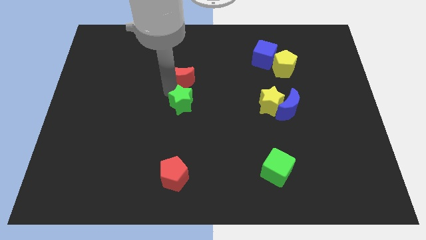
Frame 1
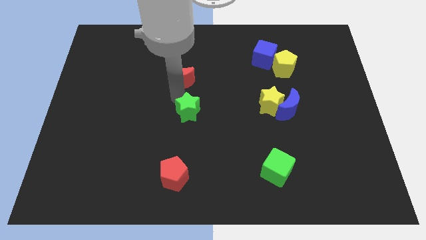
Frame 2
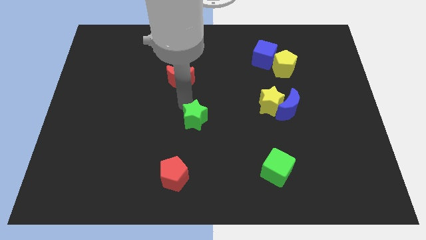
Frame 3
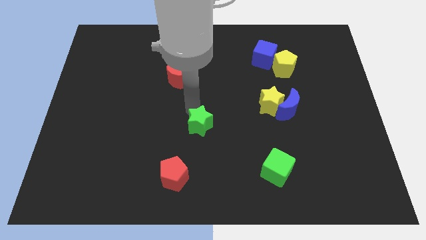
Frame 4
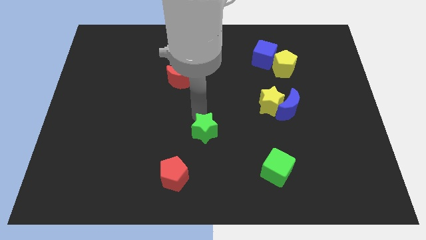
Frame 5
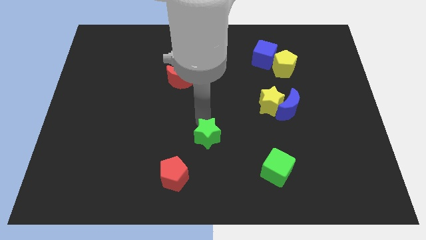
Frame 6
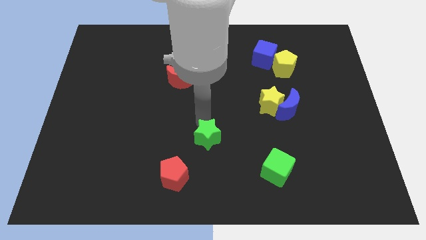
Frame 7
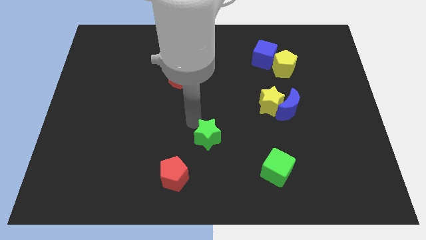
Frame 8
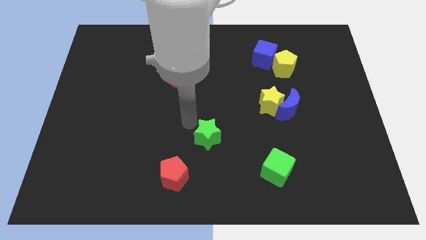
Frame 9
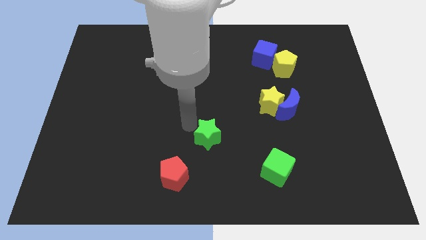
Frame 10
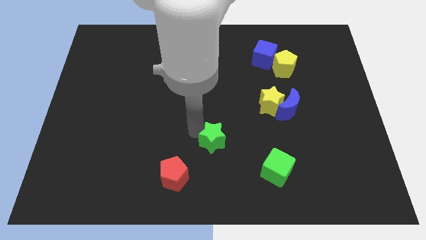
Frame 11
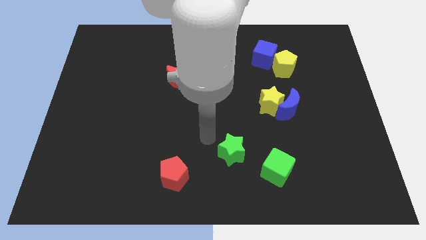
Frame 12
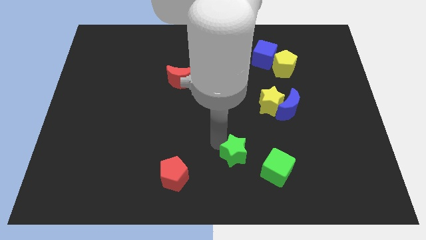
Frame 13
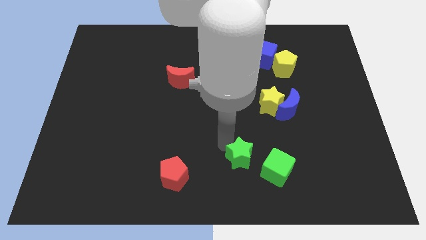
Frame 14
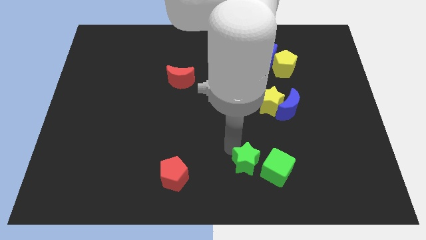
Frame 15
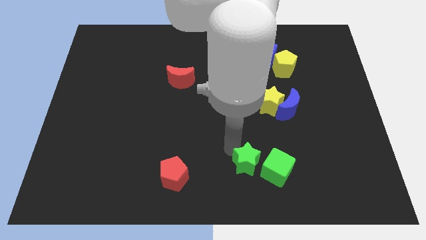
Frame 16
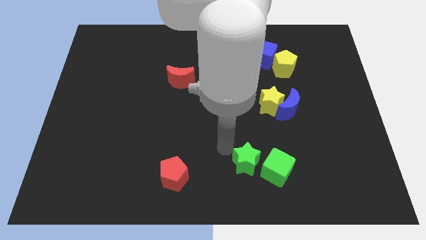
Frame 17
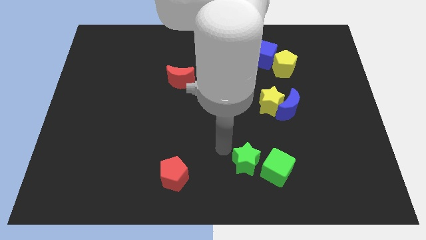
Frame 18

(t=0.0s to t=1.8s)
move the green star left to the green cube

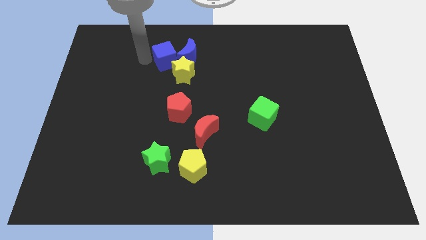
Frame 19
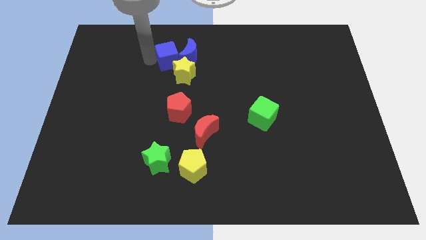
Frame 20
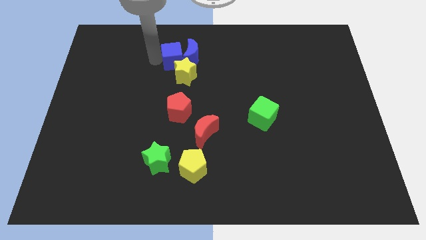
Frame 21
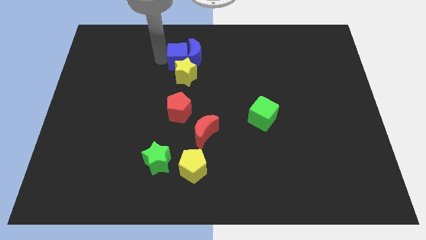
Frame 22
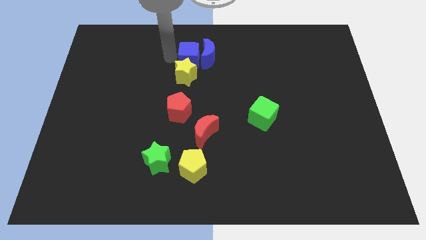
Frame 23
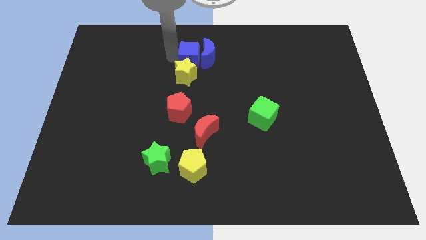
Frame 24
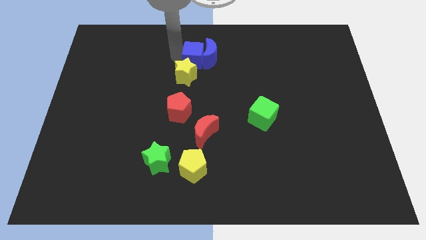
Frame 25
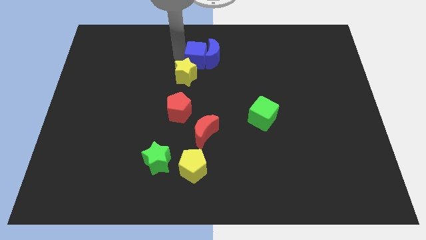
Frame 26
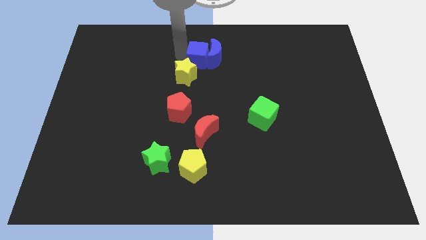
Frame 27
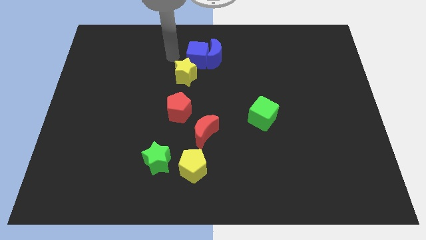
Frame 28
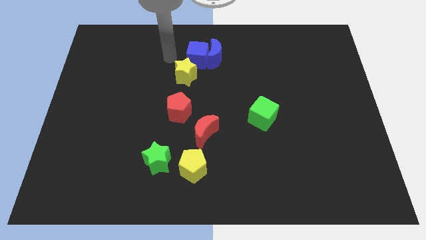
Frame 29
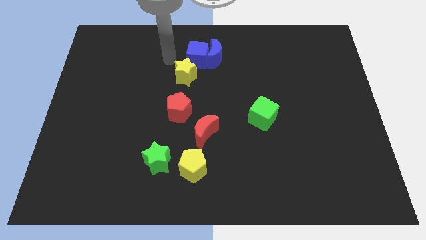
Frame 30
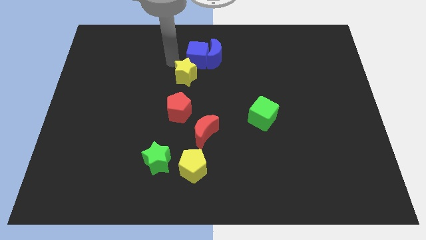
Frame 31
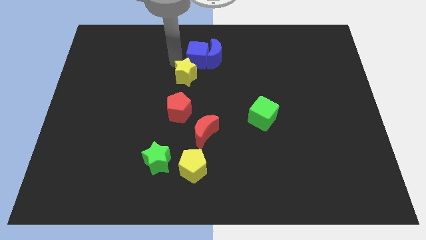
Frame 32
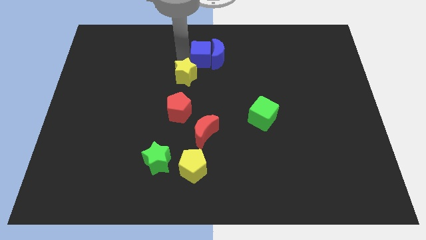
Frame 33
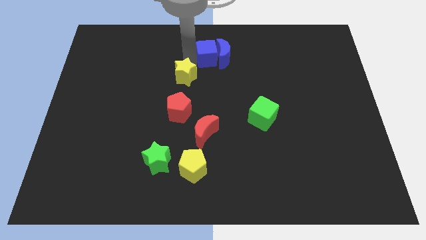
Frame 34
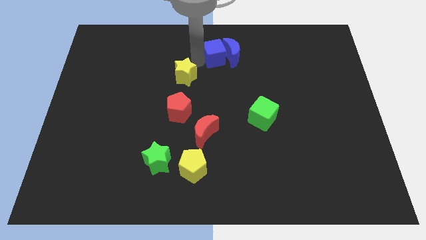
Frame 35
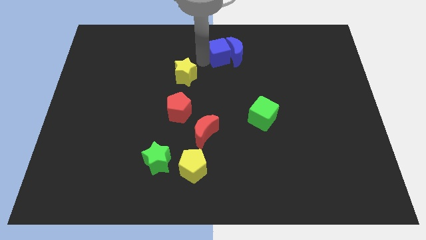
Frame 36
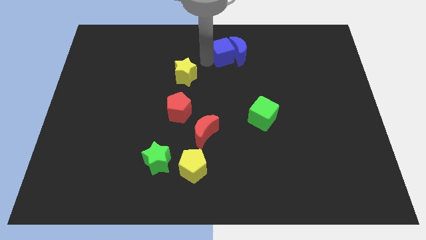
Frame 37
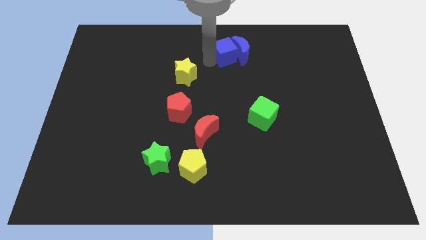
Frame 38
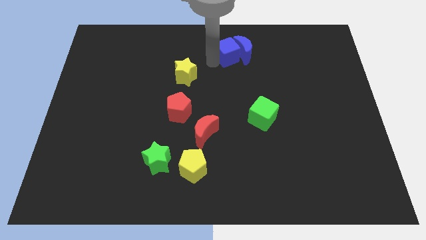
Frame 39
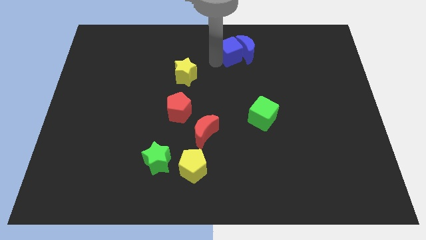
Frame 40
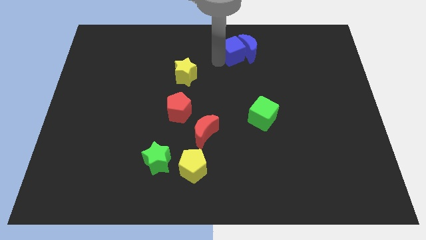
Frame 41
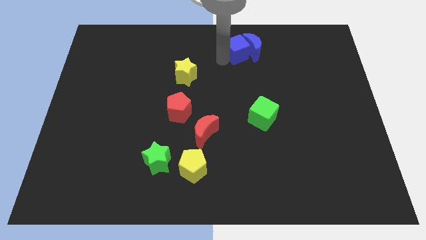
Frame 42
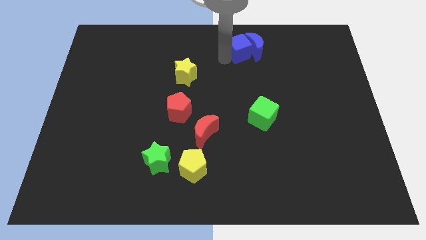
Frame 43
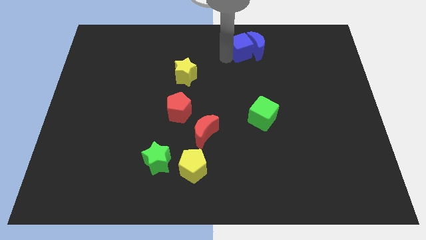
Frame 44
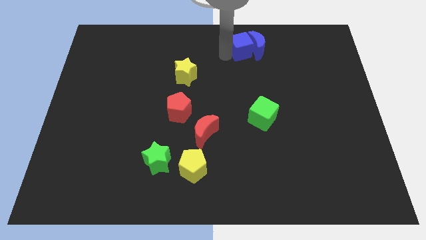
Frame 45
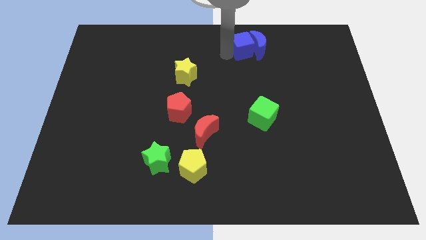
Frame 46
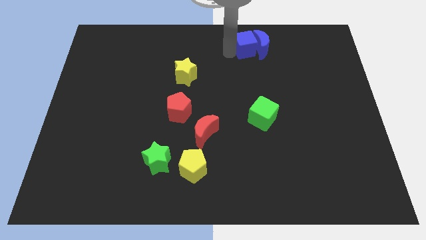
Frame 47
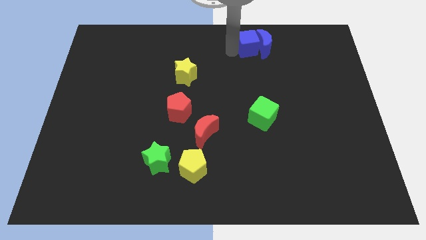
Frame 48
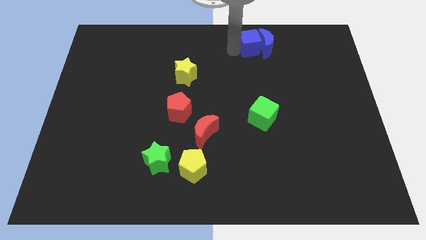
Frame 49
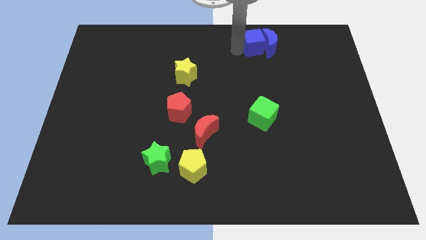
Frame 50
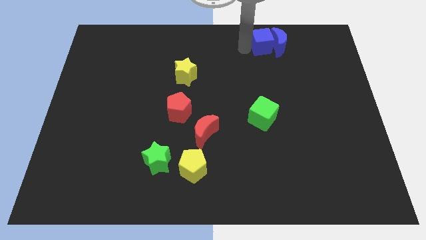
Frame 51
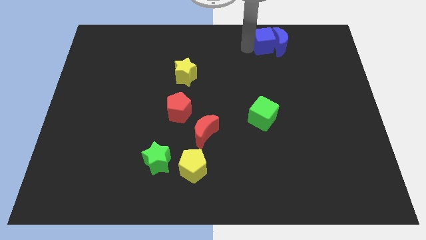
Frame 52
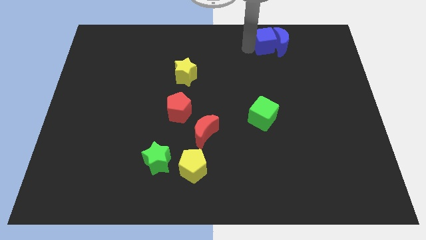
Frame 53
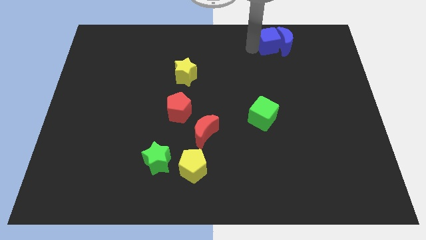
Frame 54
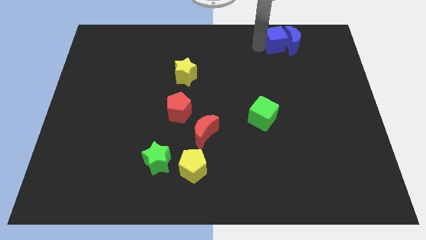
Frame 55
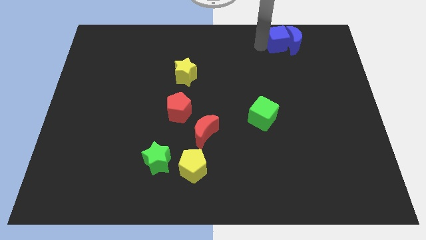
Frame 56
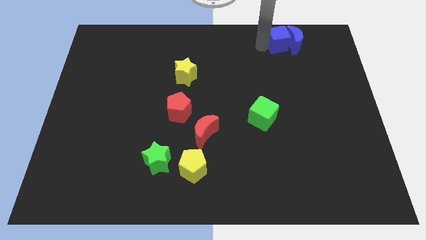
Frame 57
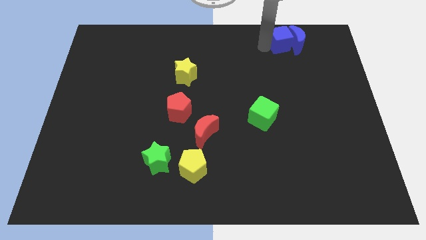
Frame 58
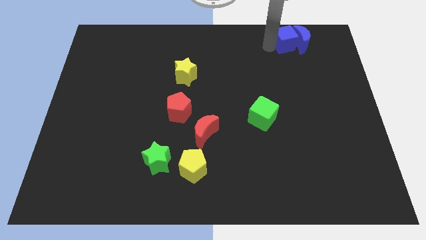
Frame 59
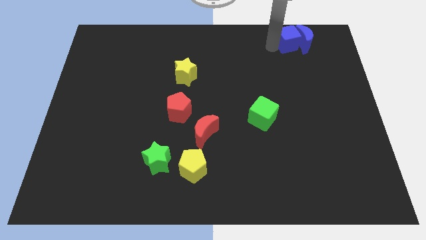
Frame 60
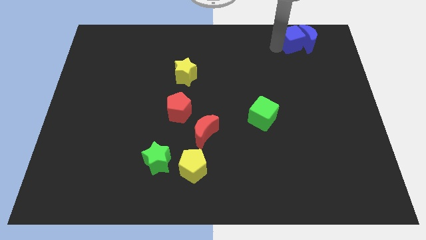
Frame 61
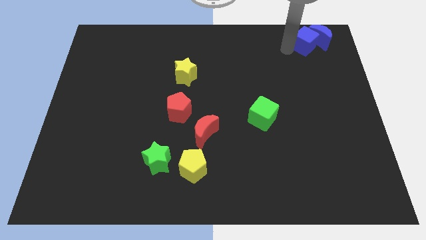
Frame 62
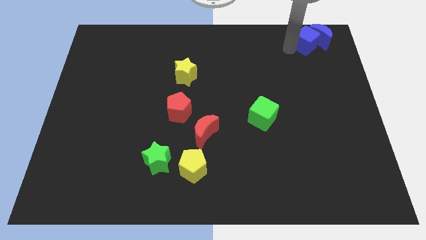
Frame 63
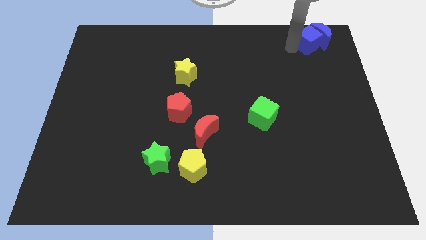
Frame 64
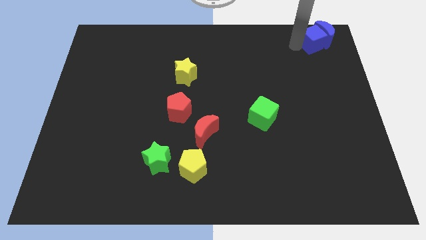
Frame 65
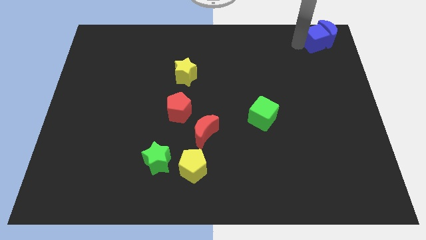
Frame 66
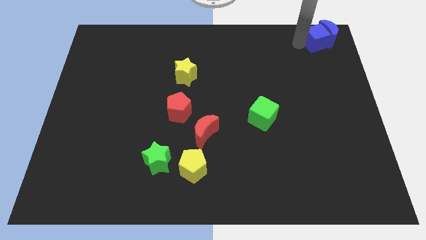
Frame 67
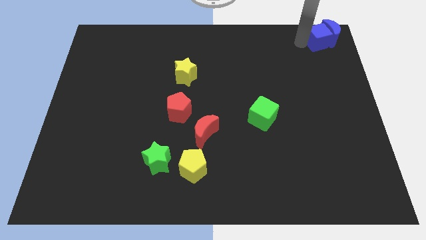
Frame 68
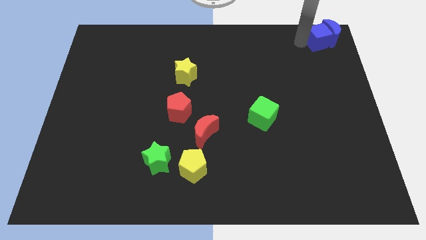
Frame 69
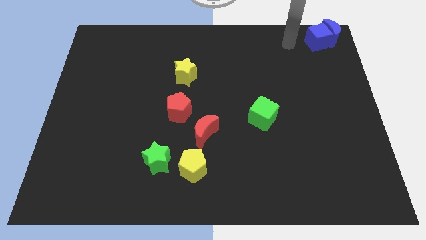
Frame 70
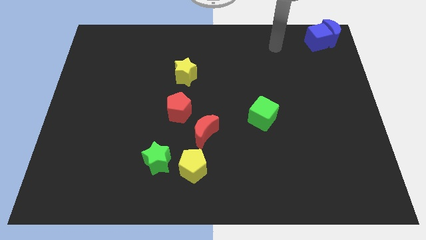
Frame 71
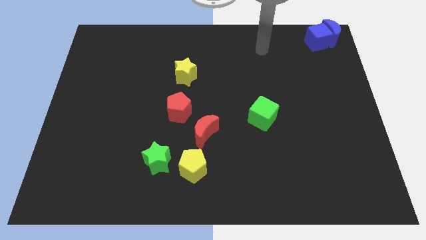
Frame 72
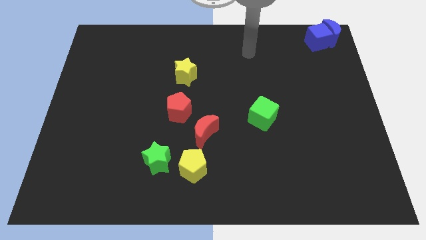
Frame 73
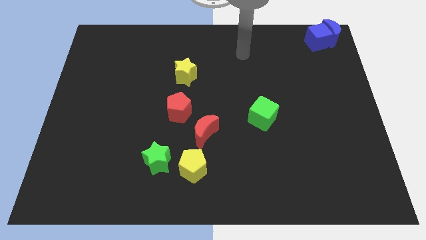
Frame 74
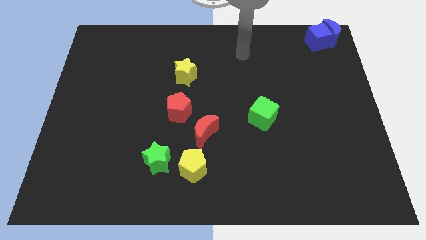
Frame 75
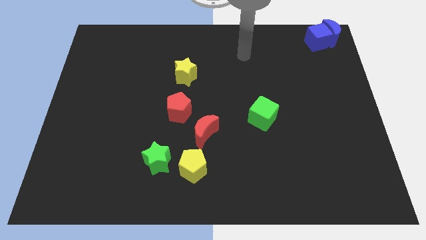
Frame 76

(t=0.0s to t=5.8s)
move the blue blocks to the top right corner of the board

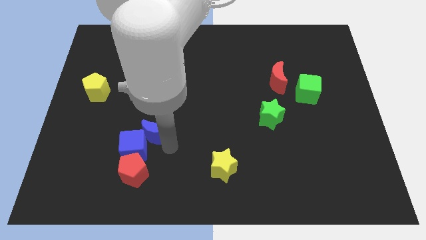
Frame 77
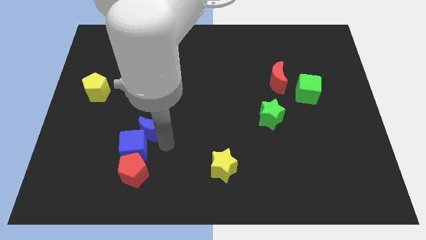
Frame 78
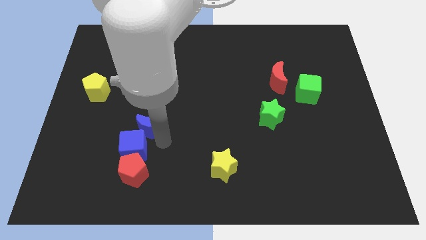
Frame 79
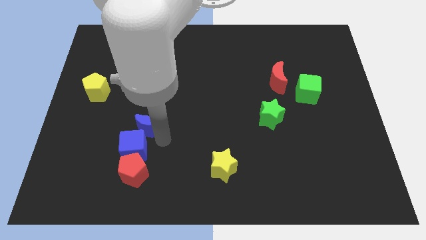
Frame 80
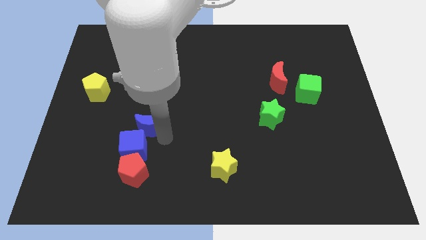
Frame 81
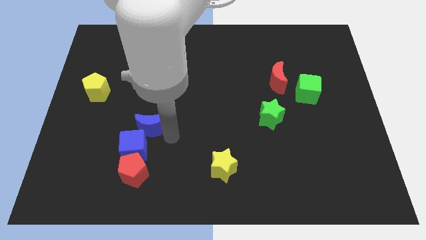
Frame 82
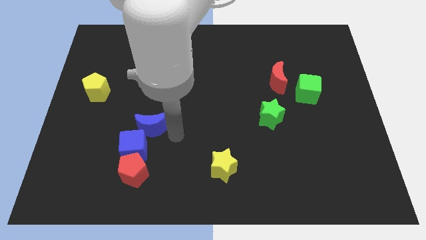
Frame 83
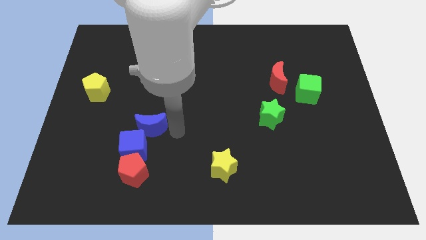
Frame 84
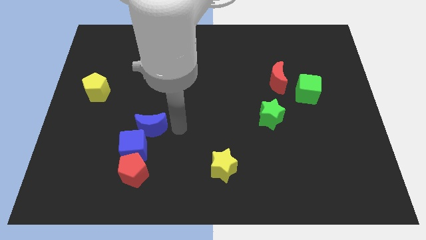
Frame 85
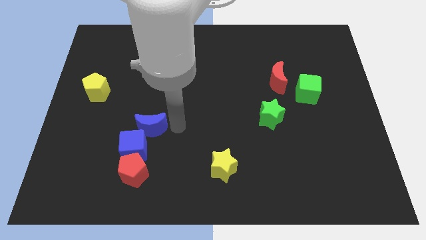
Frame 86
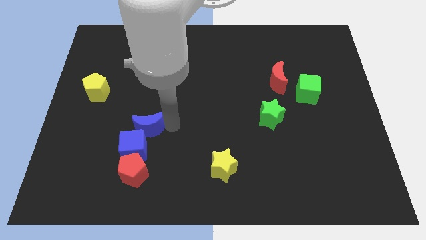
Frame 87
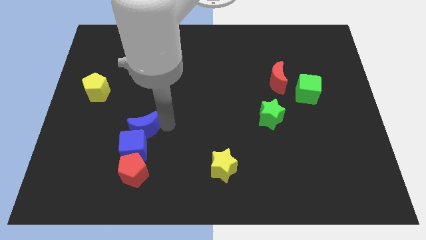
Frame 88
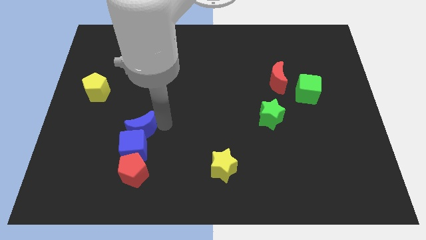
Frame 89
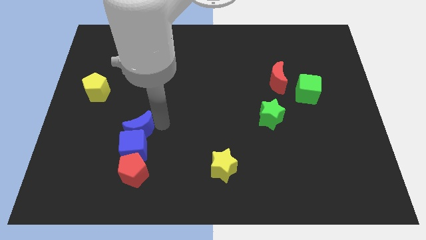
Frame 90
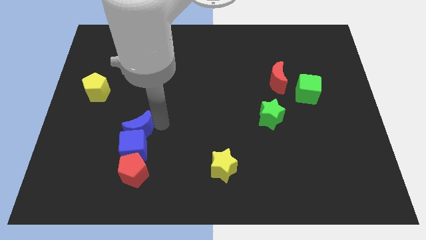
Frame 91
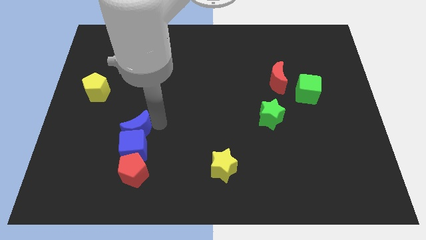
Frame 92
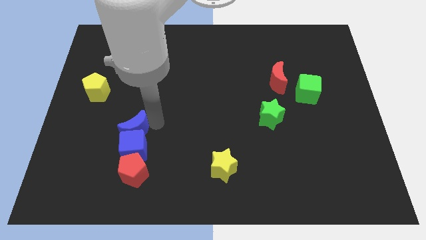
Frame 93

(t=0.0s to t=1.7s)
place the blue crescent above the blue cube
